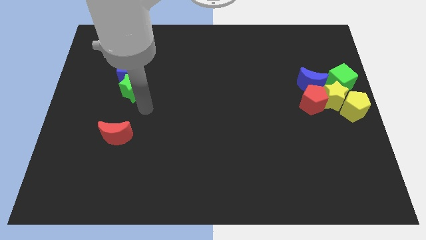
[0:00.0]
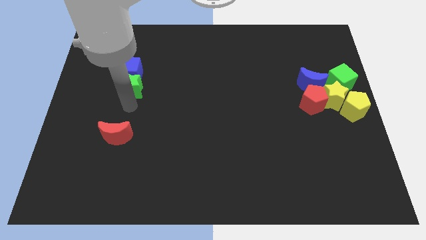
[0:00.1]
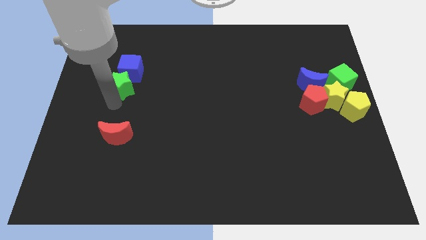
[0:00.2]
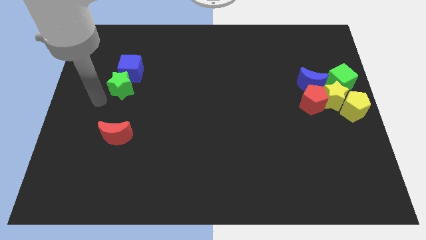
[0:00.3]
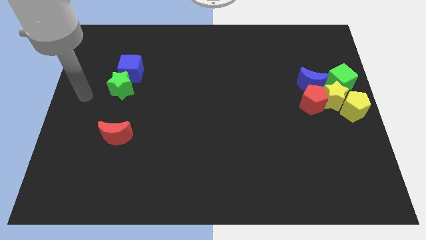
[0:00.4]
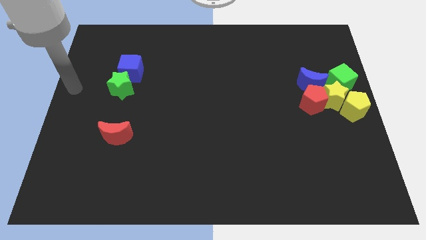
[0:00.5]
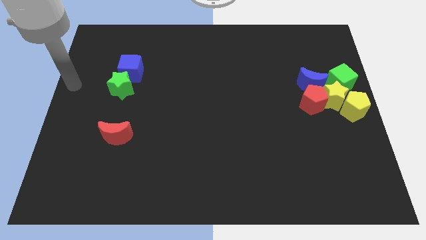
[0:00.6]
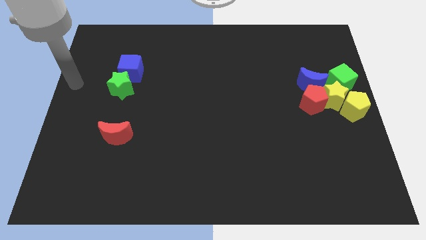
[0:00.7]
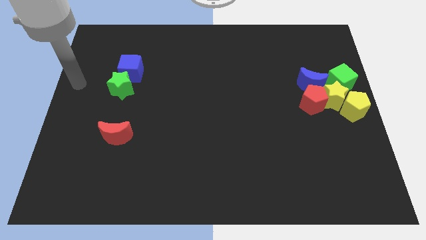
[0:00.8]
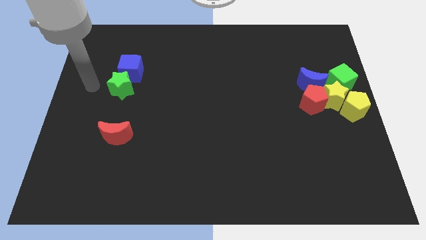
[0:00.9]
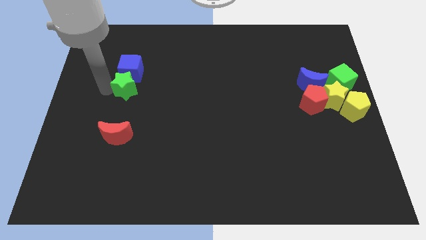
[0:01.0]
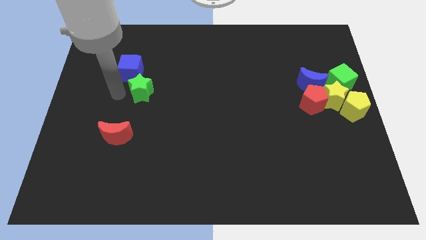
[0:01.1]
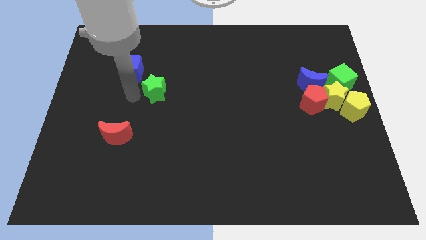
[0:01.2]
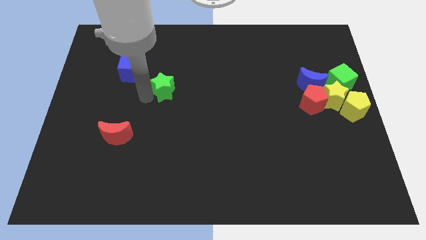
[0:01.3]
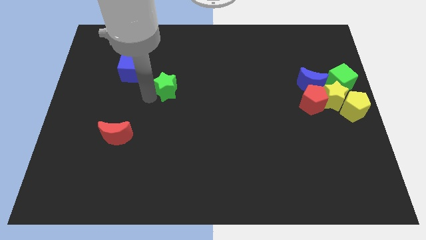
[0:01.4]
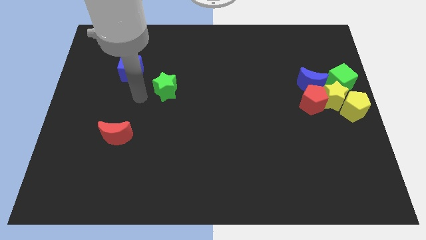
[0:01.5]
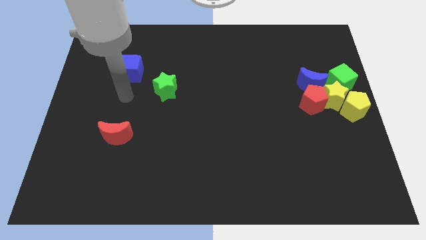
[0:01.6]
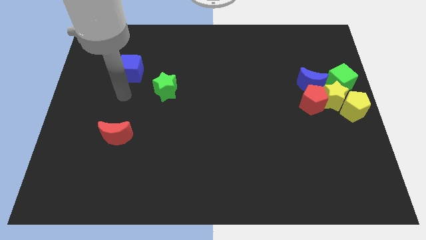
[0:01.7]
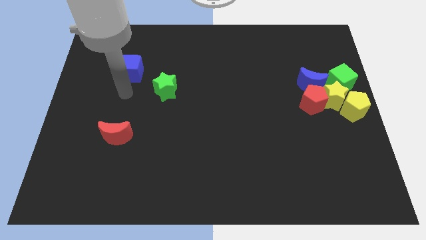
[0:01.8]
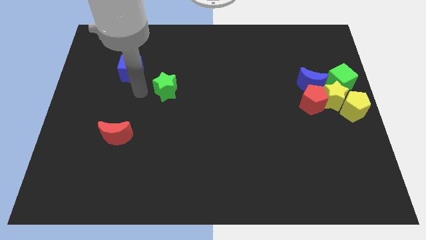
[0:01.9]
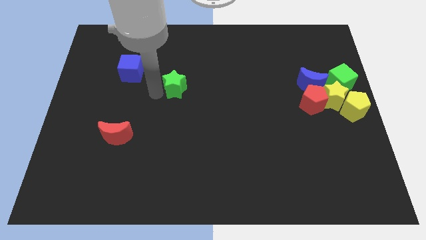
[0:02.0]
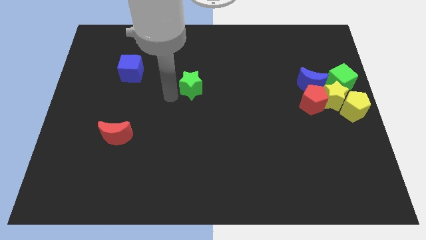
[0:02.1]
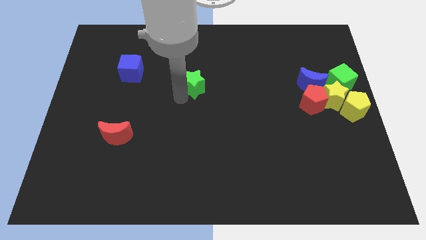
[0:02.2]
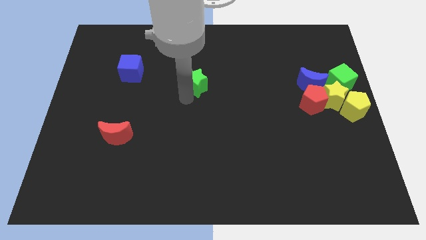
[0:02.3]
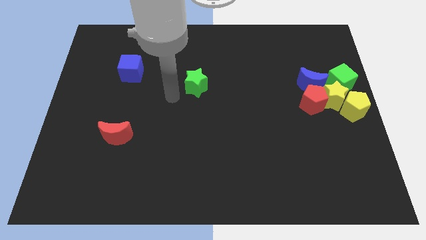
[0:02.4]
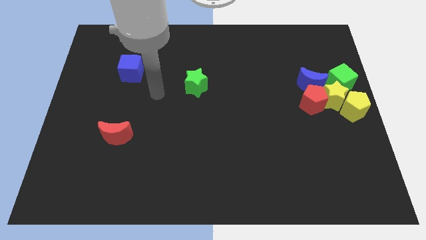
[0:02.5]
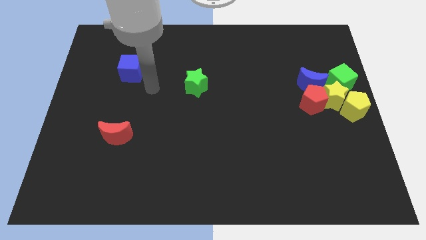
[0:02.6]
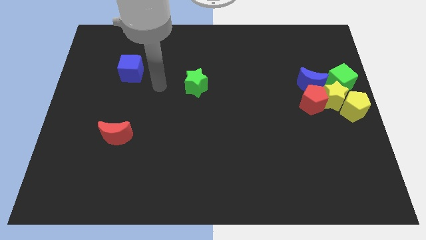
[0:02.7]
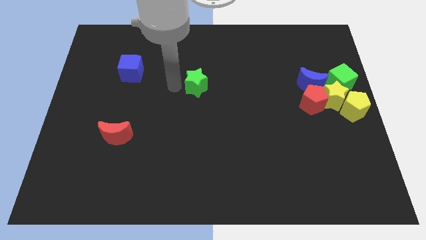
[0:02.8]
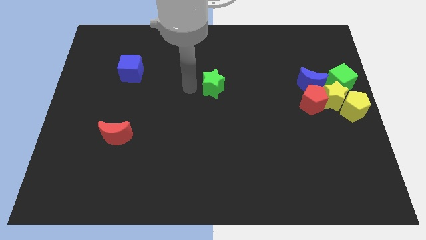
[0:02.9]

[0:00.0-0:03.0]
move green star to the center

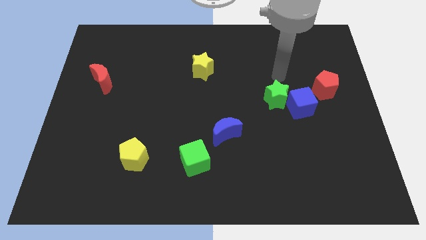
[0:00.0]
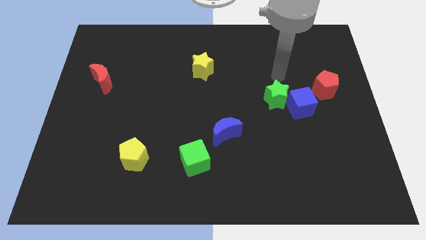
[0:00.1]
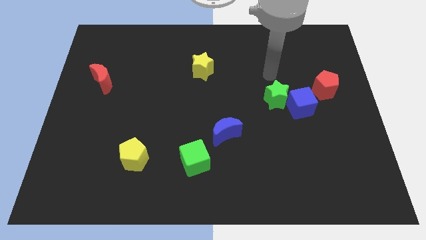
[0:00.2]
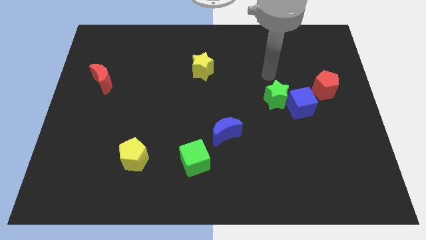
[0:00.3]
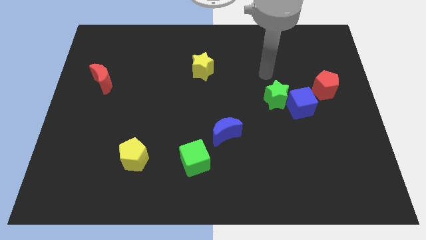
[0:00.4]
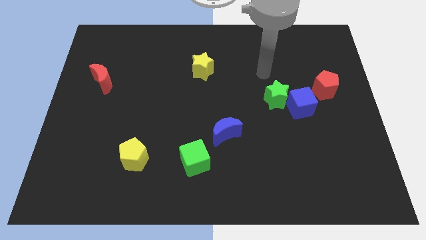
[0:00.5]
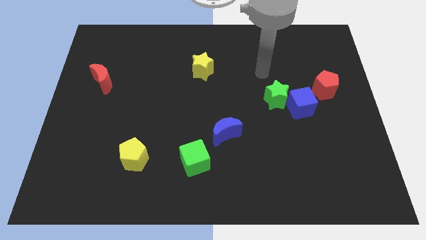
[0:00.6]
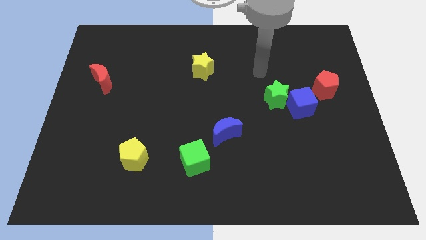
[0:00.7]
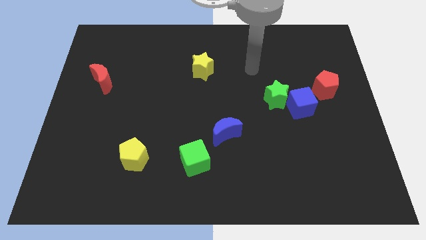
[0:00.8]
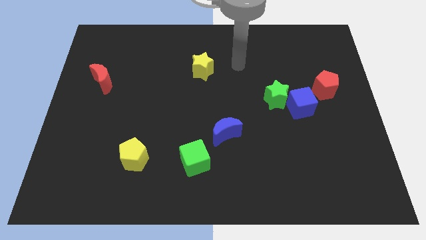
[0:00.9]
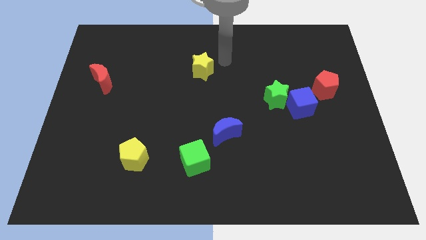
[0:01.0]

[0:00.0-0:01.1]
move your arm towards the yellow star

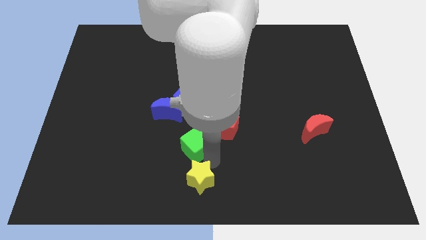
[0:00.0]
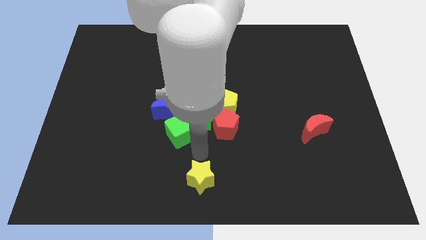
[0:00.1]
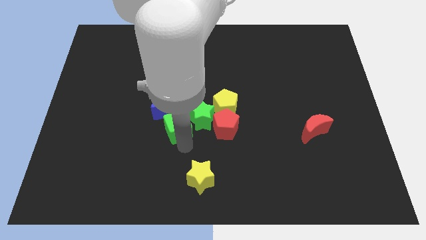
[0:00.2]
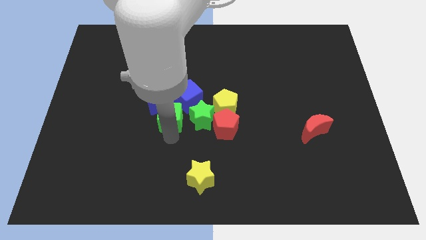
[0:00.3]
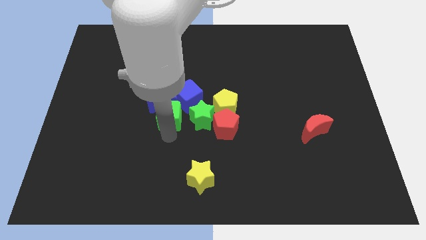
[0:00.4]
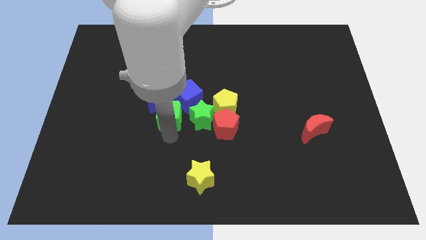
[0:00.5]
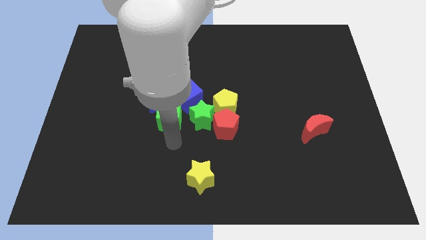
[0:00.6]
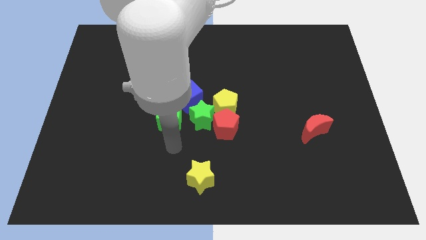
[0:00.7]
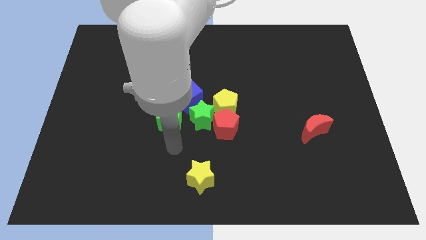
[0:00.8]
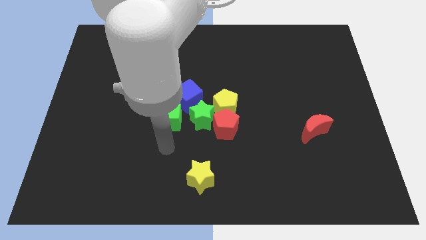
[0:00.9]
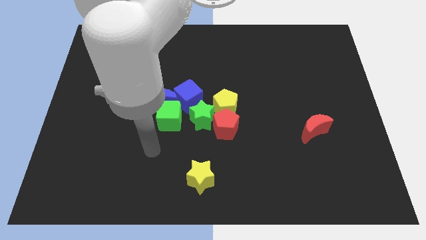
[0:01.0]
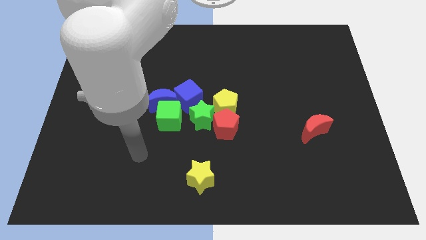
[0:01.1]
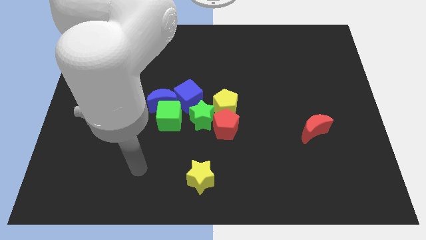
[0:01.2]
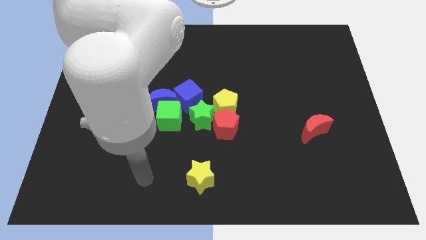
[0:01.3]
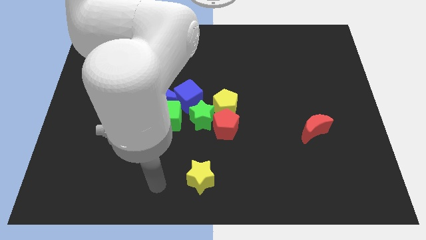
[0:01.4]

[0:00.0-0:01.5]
place green cube below the blue crescent

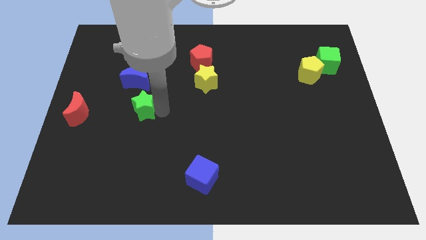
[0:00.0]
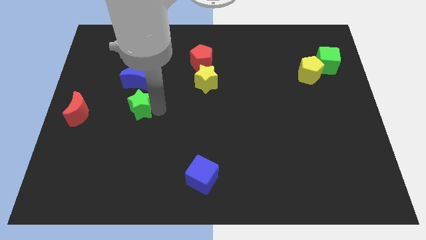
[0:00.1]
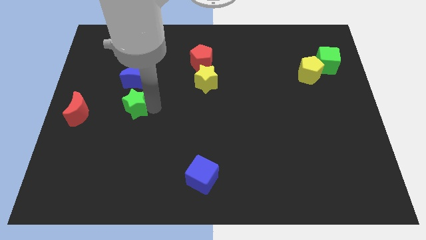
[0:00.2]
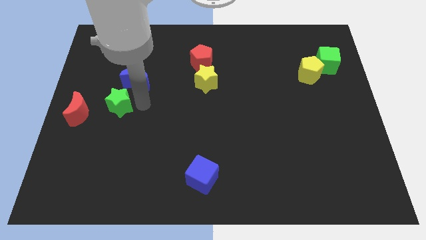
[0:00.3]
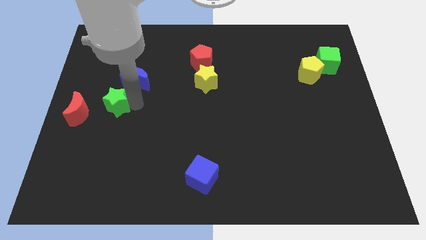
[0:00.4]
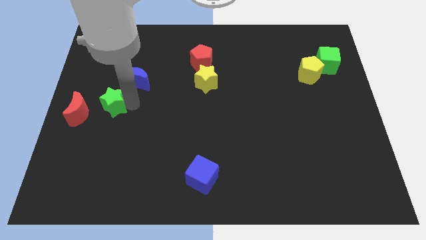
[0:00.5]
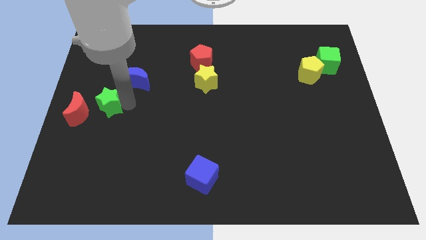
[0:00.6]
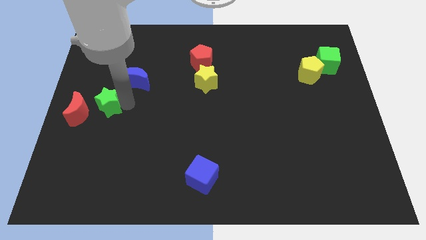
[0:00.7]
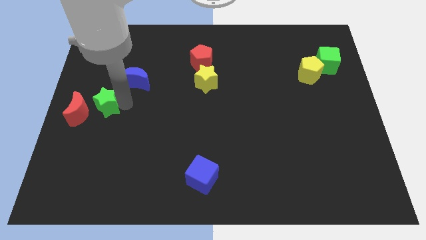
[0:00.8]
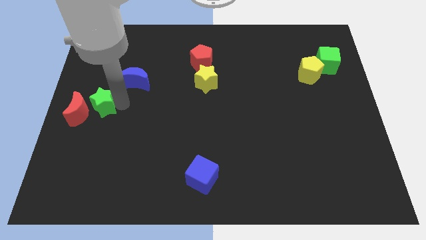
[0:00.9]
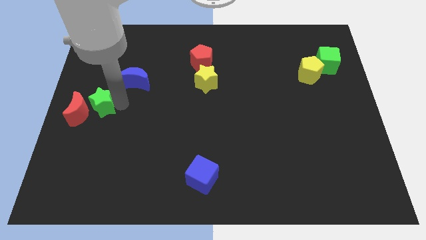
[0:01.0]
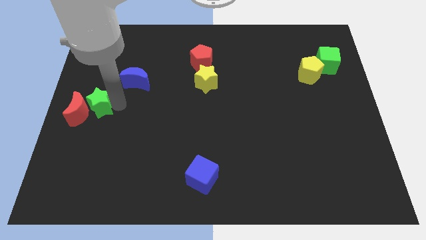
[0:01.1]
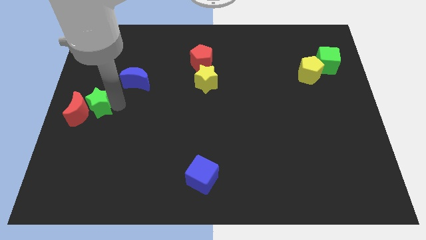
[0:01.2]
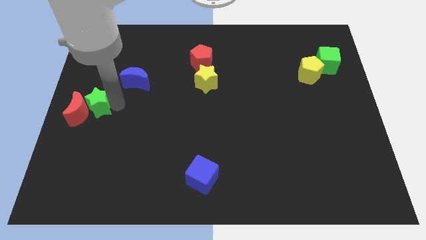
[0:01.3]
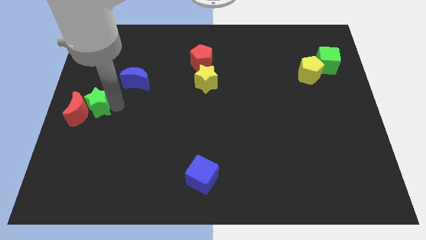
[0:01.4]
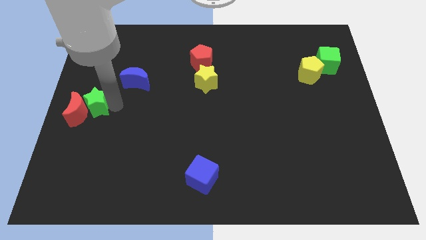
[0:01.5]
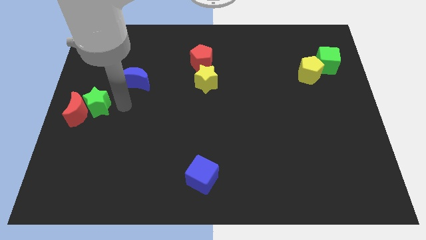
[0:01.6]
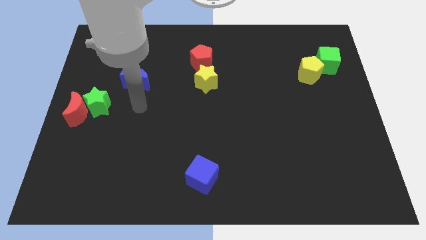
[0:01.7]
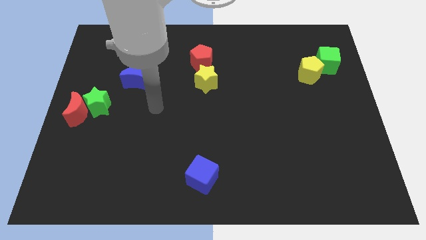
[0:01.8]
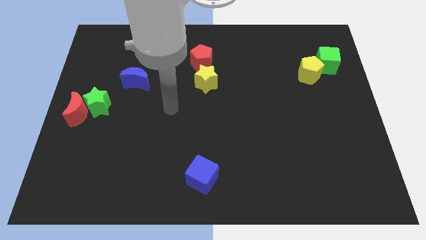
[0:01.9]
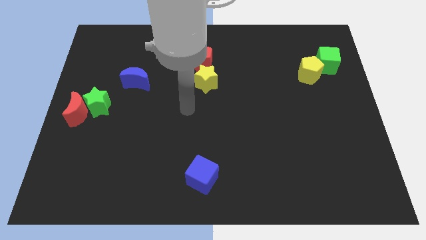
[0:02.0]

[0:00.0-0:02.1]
slide green star into red moon

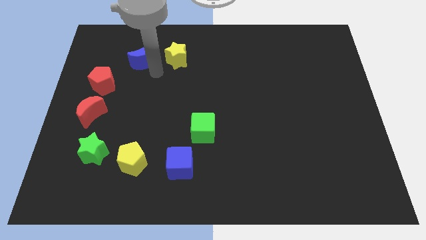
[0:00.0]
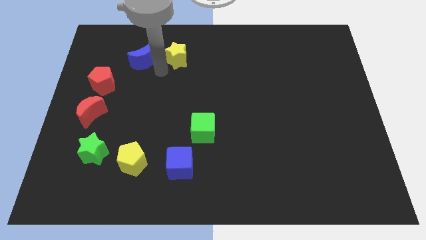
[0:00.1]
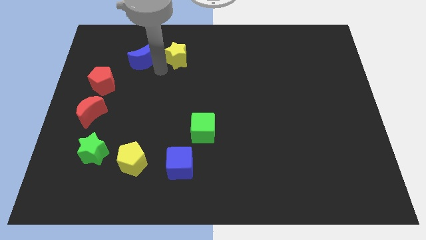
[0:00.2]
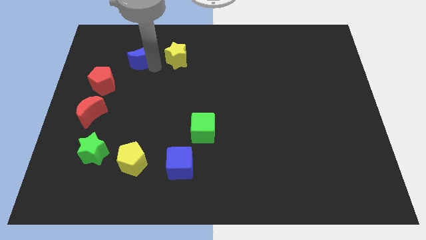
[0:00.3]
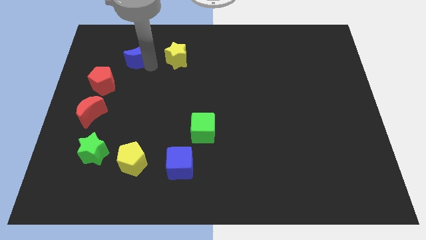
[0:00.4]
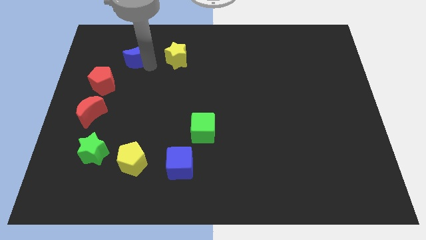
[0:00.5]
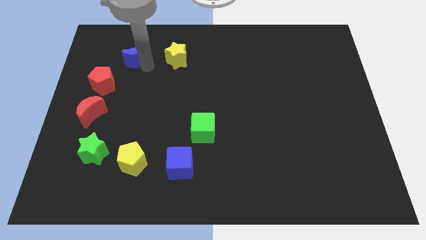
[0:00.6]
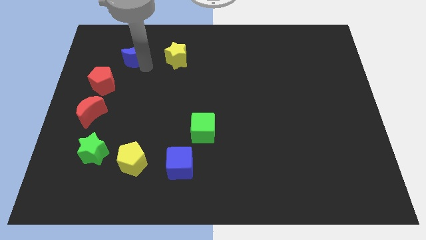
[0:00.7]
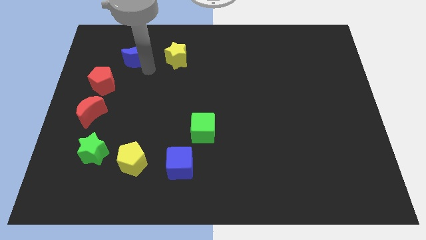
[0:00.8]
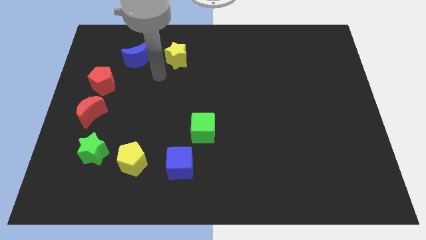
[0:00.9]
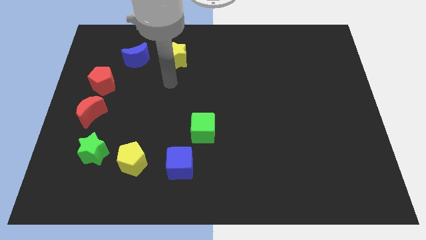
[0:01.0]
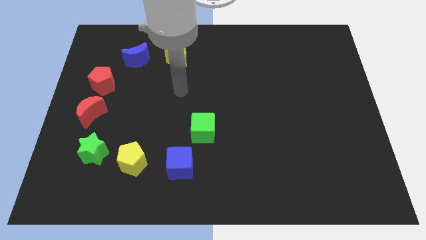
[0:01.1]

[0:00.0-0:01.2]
slightly push the blue crescent to the top
